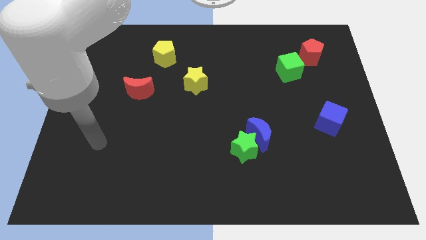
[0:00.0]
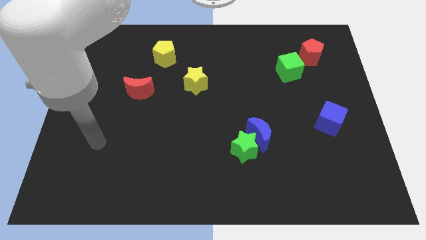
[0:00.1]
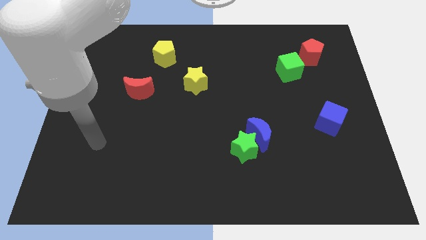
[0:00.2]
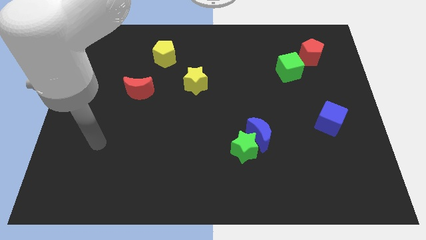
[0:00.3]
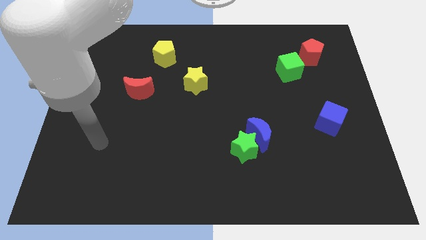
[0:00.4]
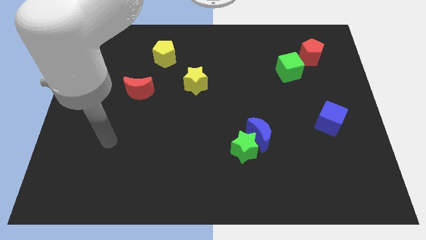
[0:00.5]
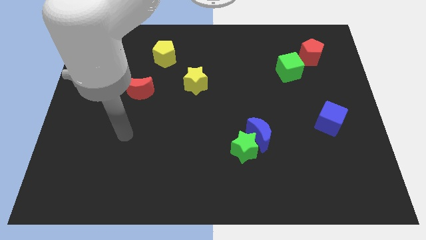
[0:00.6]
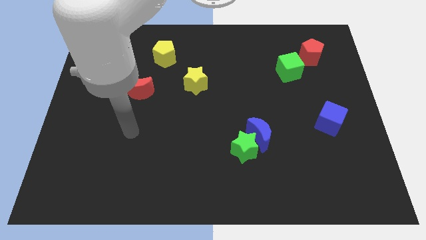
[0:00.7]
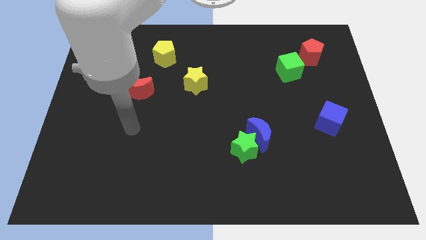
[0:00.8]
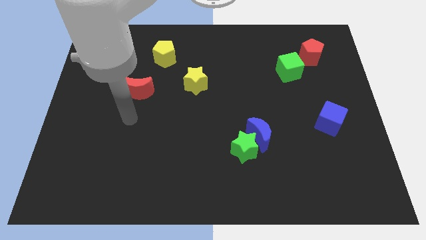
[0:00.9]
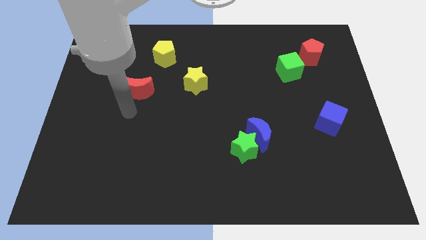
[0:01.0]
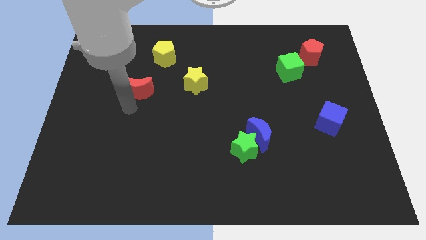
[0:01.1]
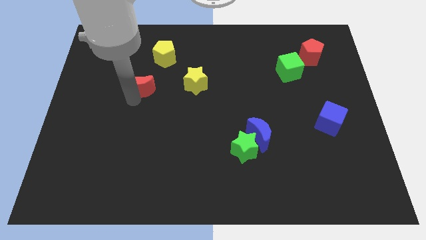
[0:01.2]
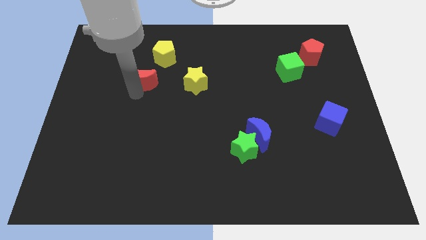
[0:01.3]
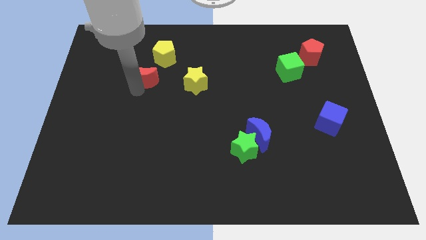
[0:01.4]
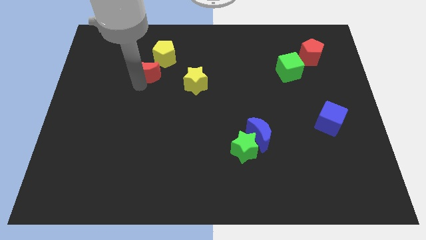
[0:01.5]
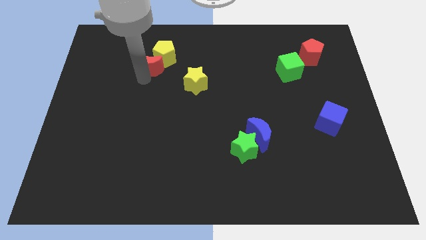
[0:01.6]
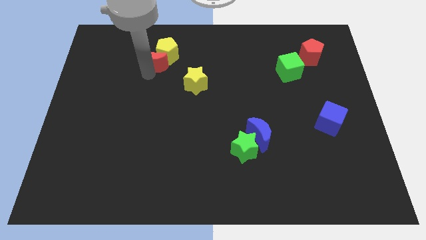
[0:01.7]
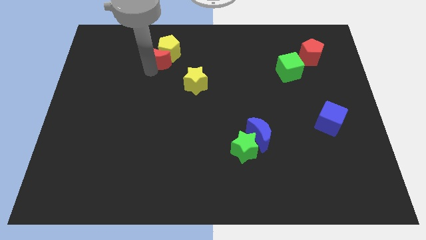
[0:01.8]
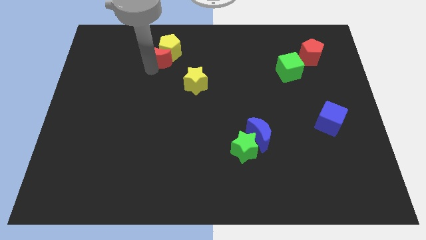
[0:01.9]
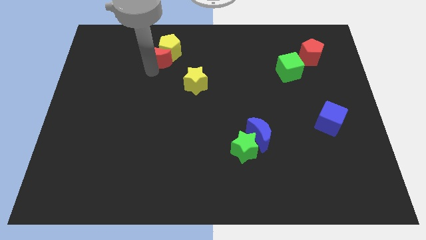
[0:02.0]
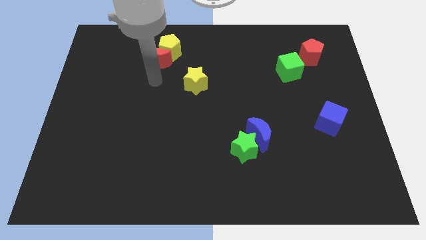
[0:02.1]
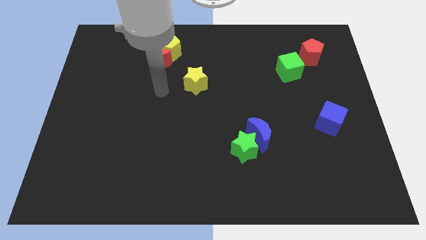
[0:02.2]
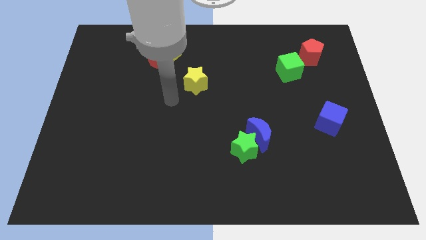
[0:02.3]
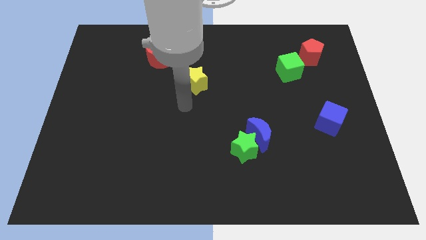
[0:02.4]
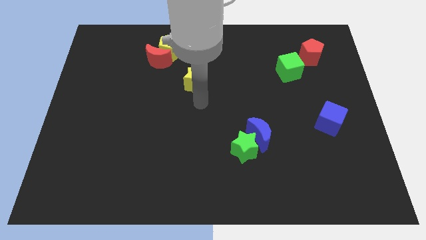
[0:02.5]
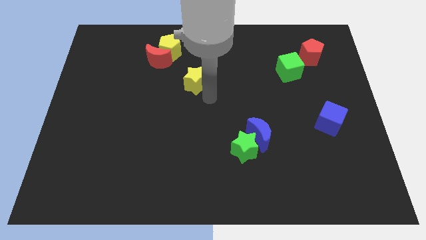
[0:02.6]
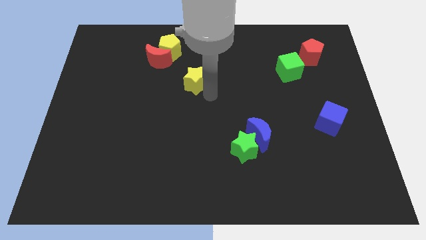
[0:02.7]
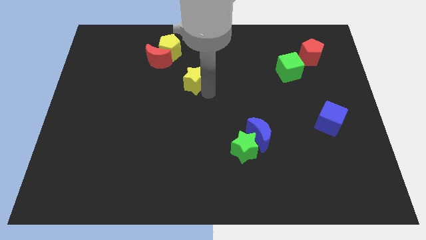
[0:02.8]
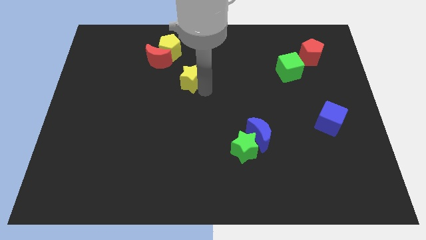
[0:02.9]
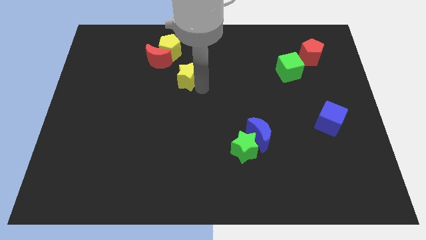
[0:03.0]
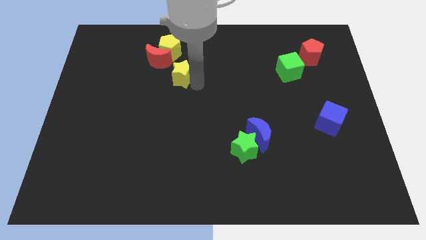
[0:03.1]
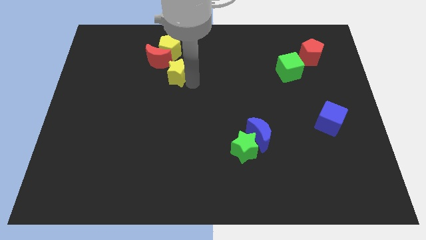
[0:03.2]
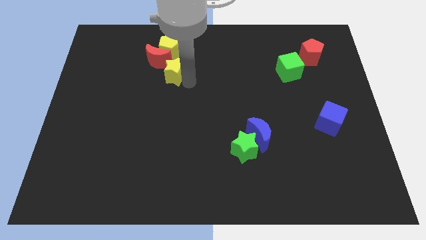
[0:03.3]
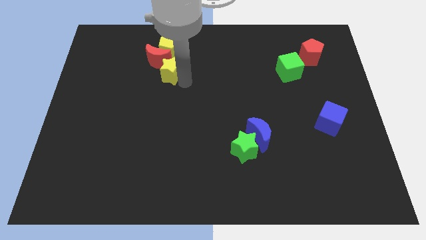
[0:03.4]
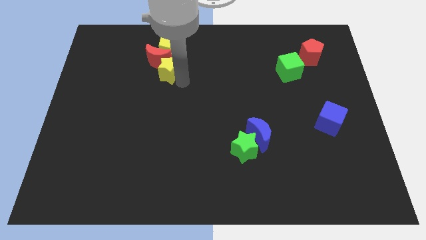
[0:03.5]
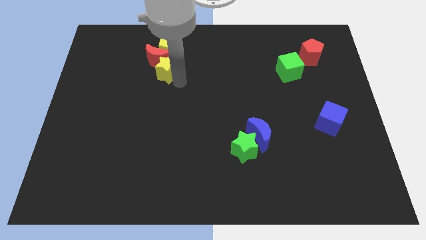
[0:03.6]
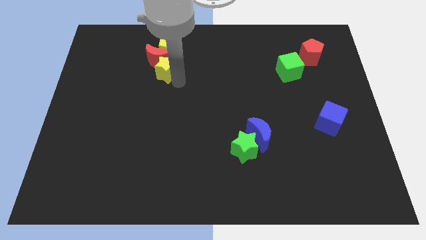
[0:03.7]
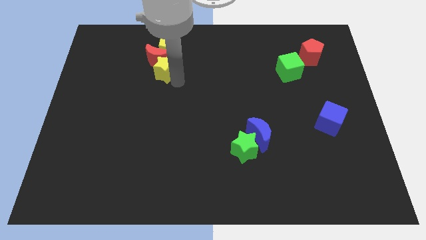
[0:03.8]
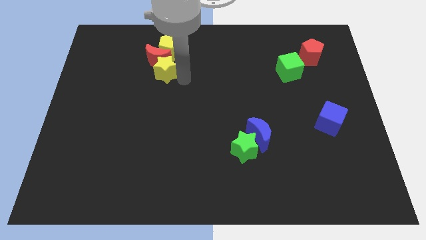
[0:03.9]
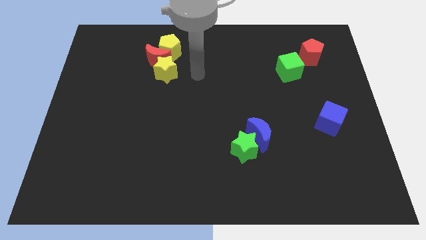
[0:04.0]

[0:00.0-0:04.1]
push the red crescent and yellow star to the bottom side of the yellow pentagon

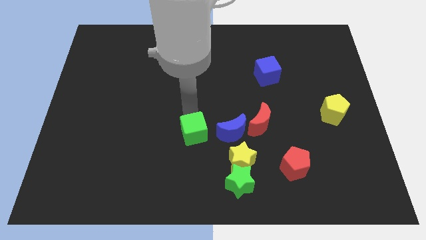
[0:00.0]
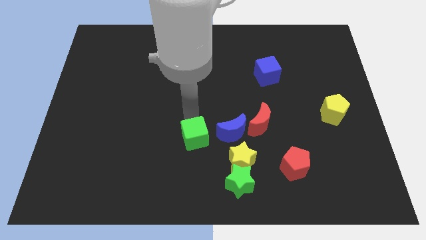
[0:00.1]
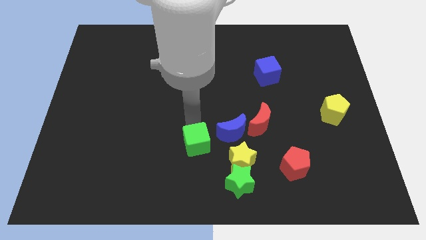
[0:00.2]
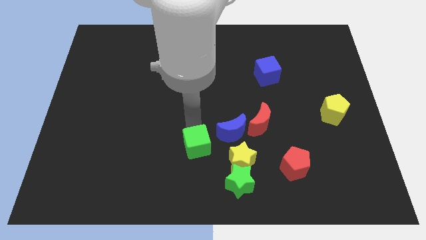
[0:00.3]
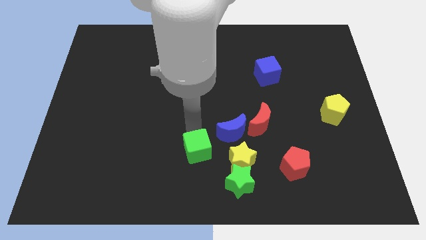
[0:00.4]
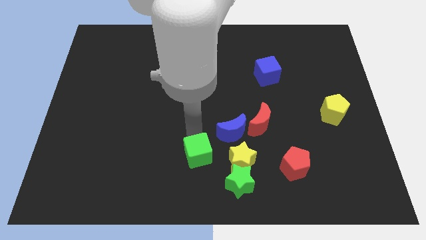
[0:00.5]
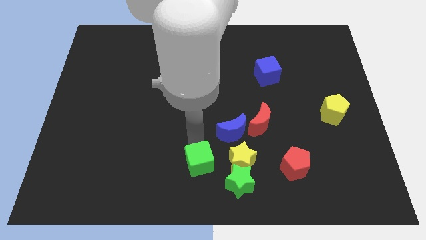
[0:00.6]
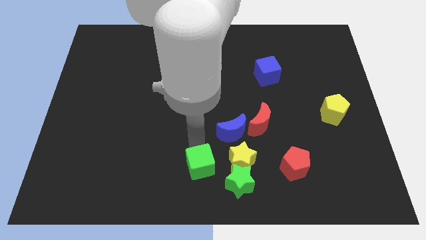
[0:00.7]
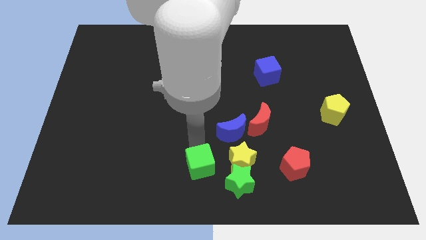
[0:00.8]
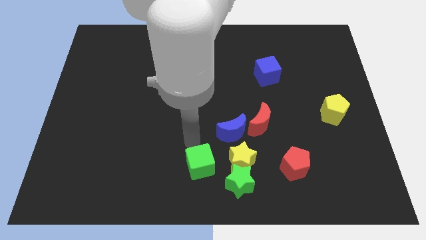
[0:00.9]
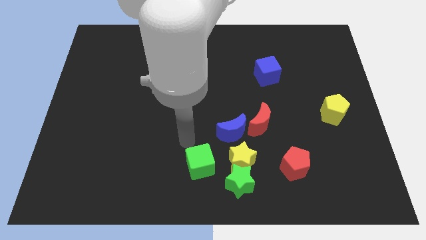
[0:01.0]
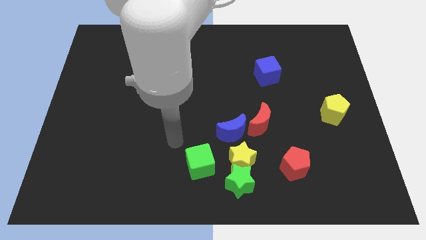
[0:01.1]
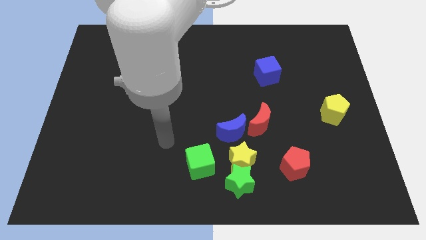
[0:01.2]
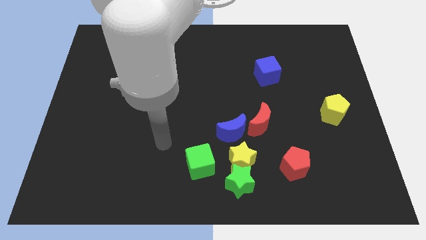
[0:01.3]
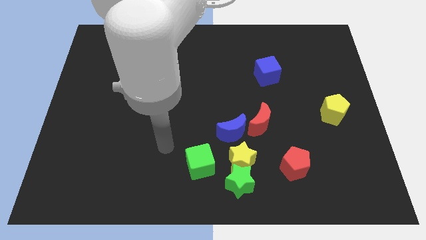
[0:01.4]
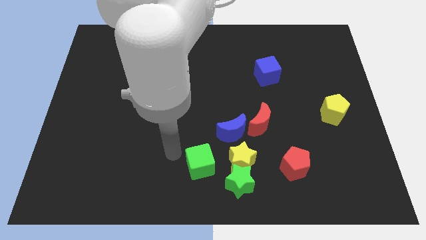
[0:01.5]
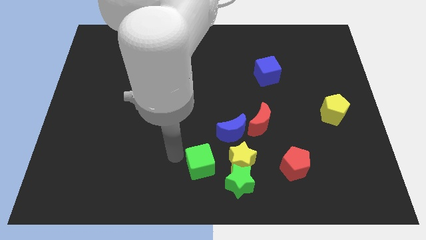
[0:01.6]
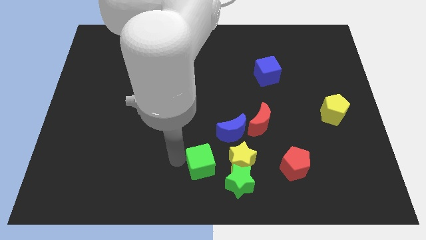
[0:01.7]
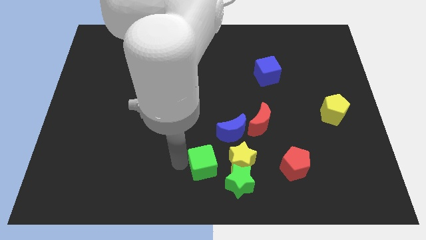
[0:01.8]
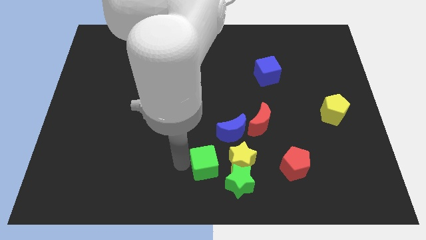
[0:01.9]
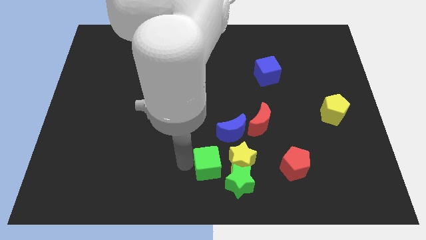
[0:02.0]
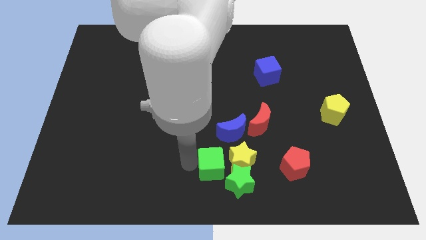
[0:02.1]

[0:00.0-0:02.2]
push green block horizontal to yellow star

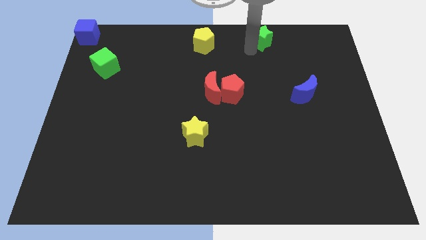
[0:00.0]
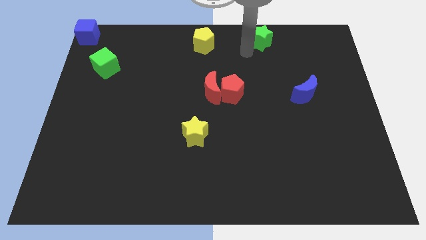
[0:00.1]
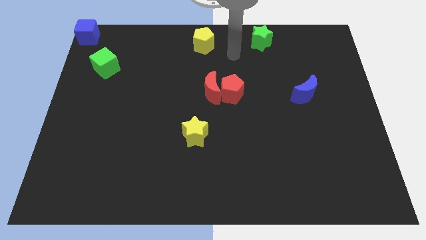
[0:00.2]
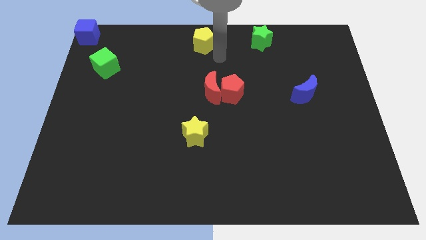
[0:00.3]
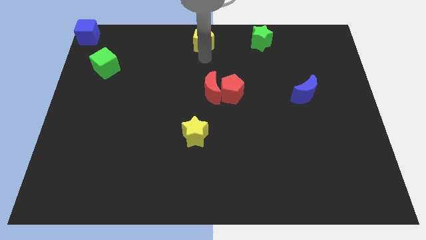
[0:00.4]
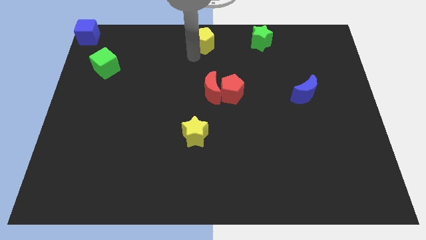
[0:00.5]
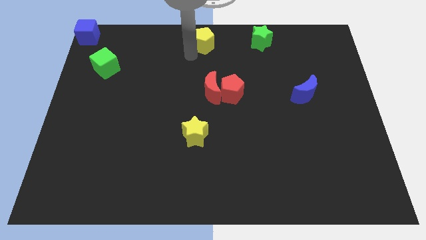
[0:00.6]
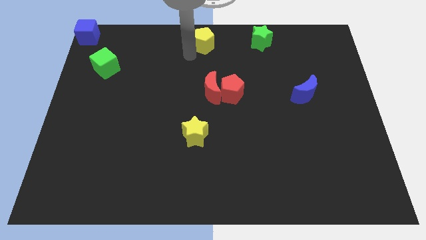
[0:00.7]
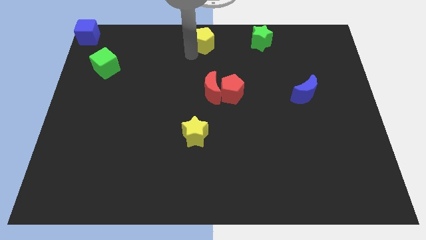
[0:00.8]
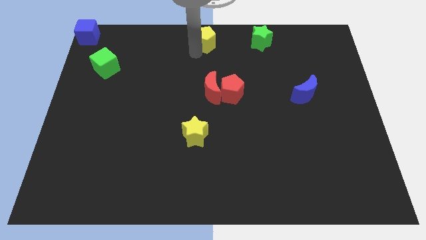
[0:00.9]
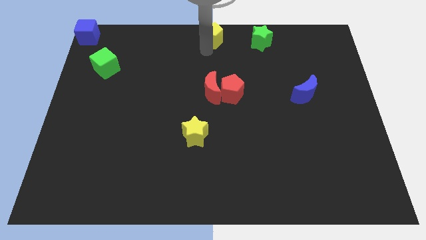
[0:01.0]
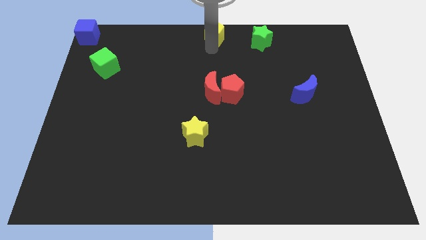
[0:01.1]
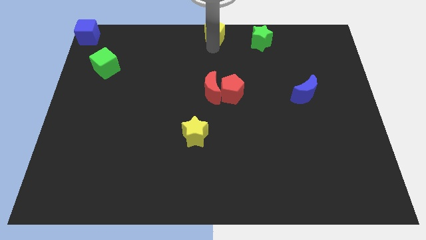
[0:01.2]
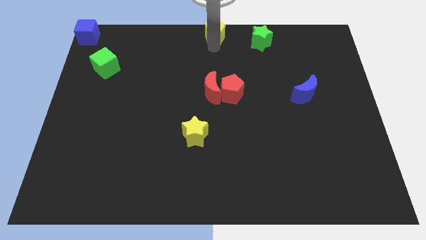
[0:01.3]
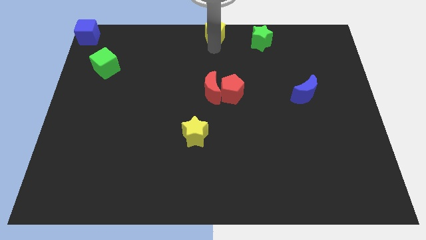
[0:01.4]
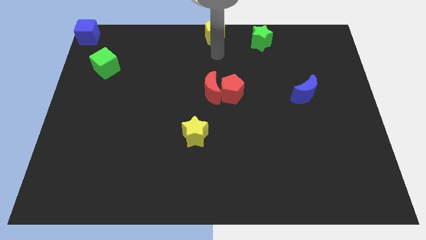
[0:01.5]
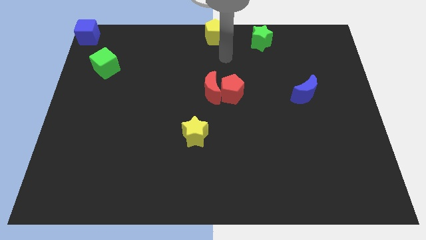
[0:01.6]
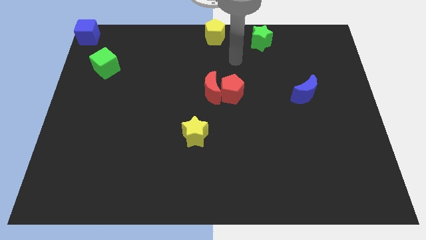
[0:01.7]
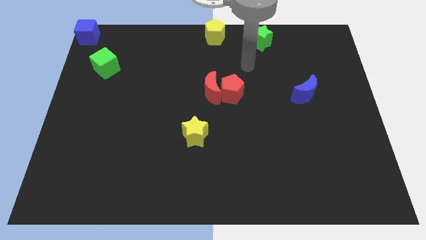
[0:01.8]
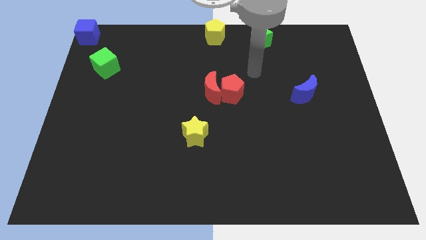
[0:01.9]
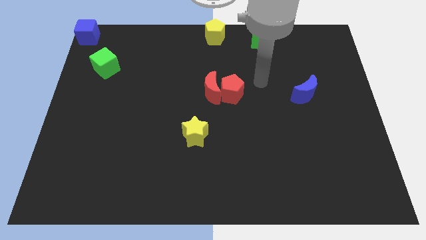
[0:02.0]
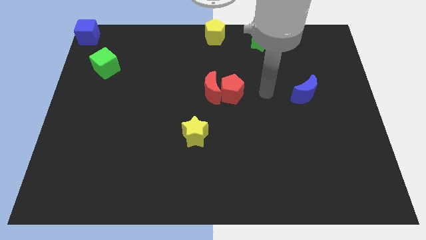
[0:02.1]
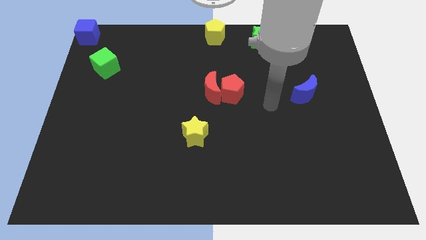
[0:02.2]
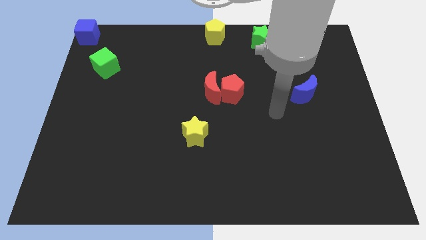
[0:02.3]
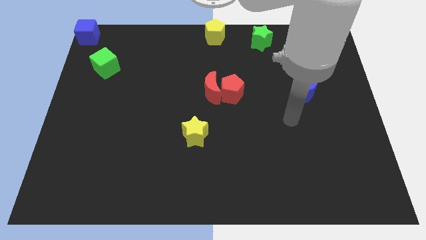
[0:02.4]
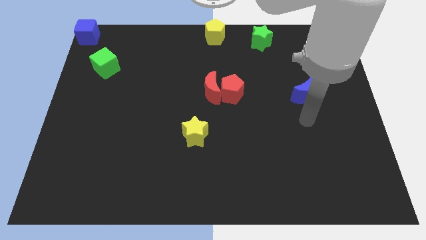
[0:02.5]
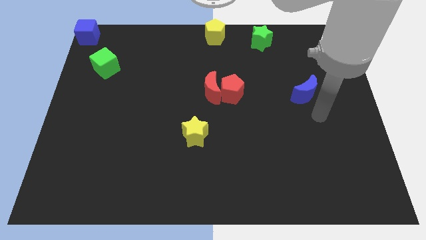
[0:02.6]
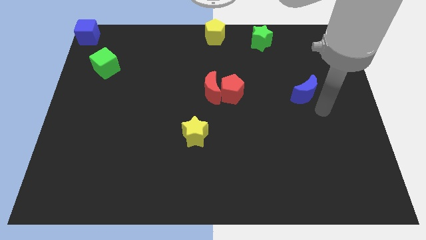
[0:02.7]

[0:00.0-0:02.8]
push the yellow pentagon to the top center of the board
